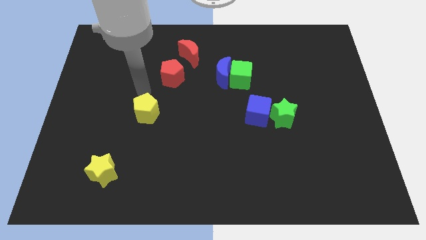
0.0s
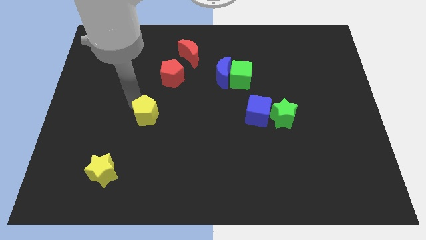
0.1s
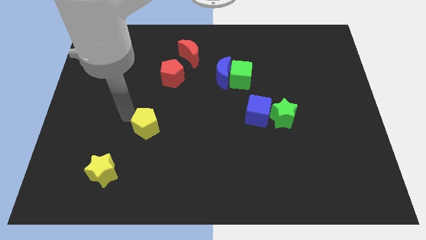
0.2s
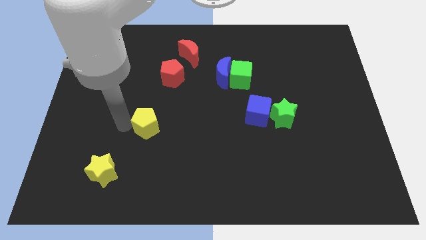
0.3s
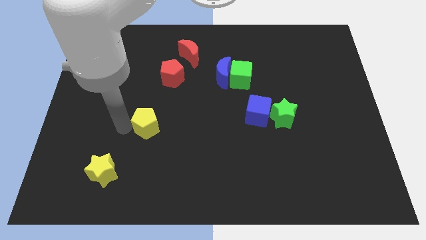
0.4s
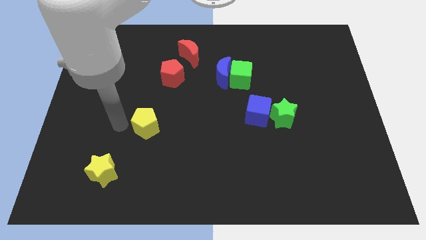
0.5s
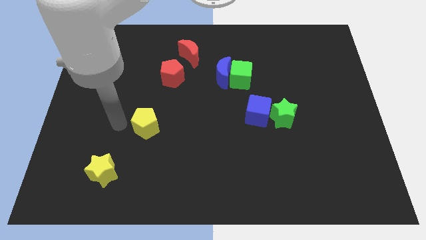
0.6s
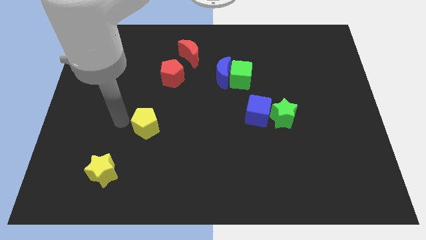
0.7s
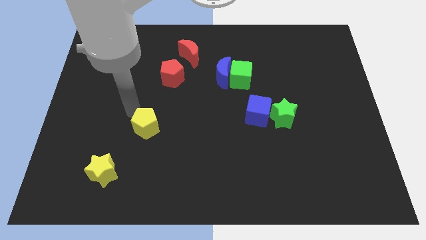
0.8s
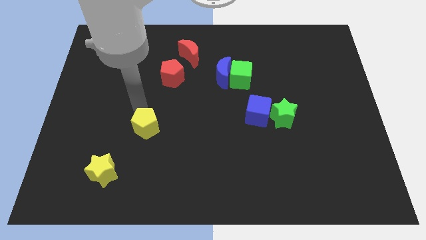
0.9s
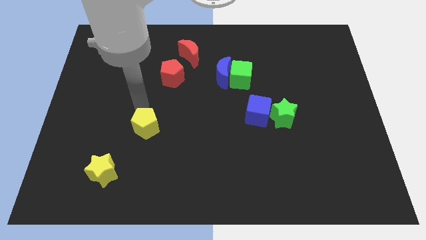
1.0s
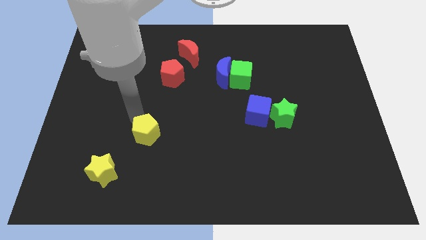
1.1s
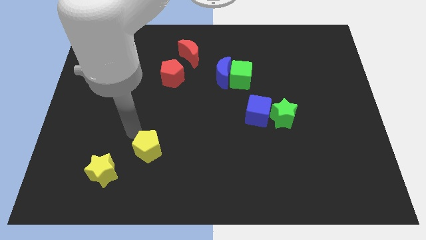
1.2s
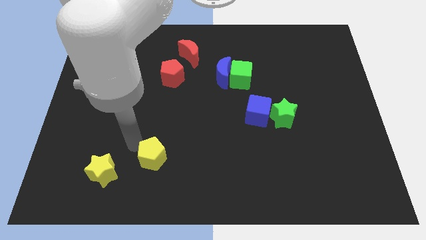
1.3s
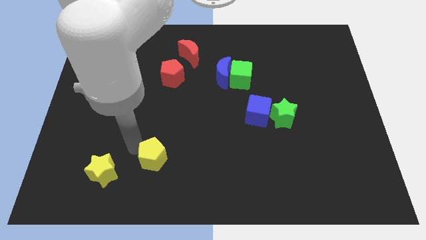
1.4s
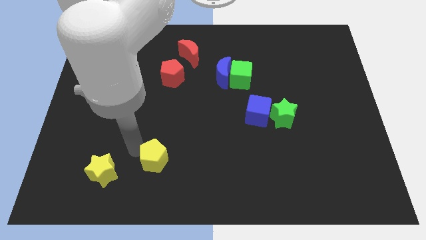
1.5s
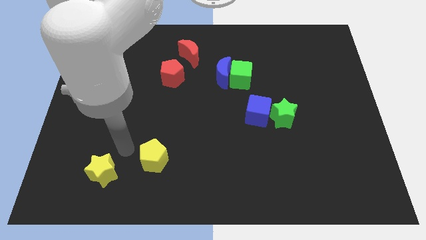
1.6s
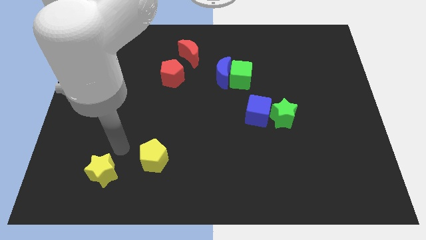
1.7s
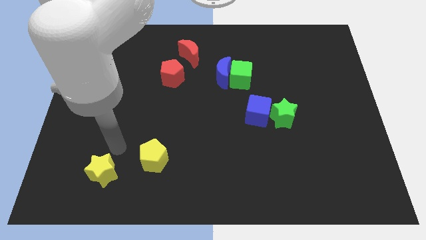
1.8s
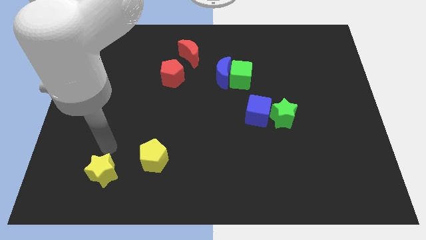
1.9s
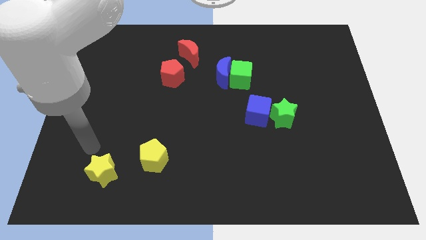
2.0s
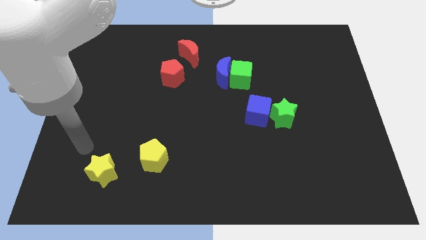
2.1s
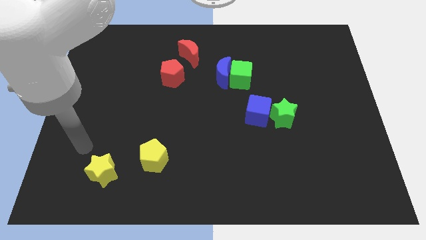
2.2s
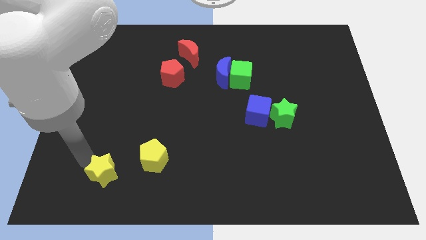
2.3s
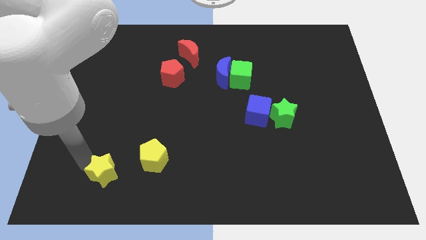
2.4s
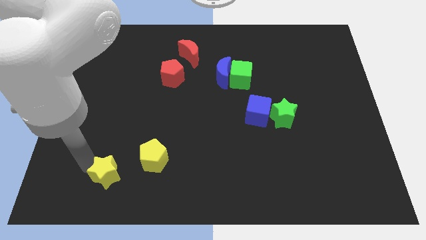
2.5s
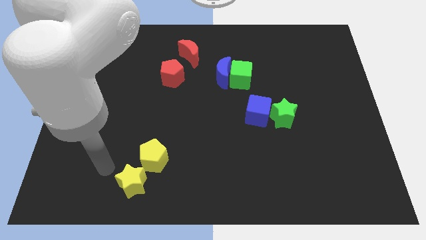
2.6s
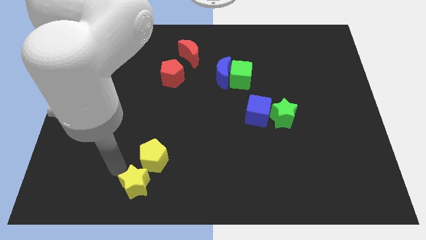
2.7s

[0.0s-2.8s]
push the yellow blocks towards the bottom side

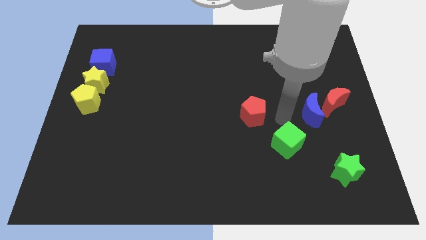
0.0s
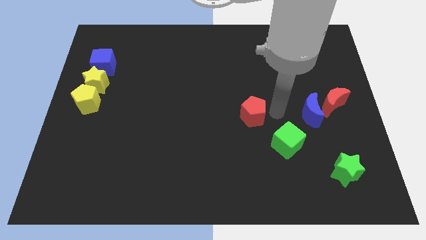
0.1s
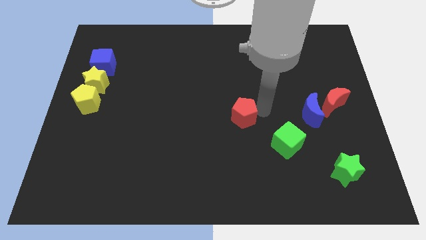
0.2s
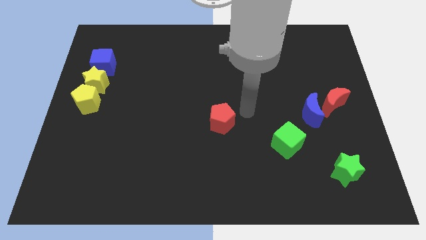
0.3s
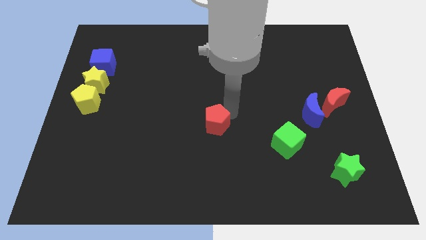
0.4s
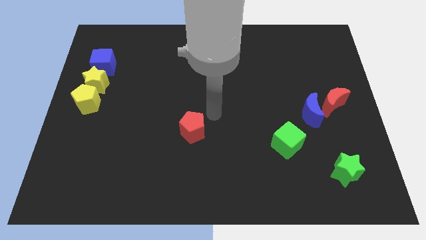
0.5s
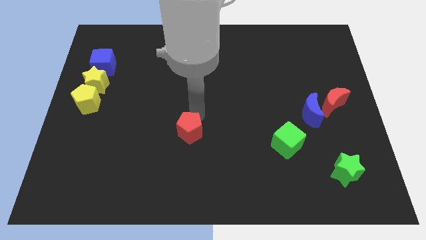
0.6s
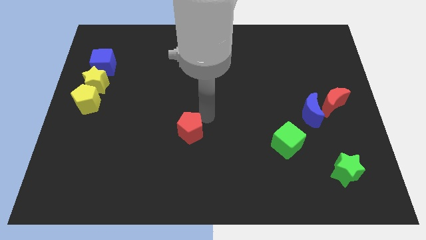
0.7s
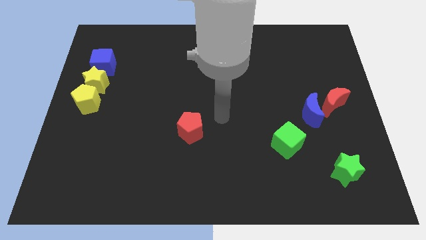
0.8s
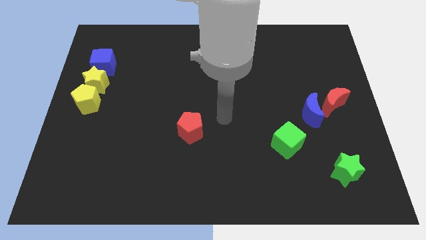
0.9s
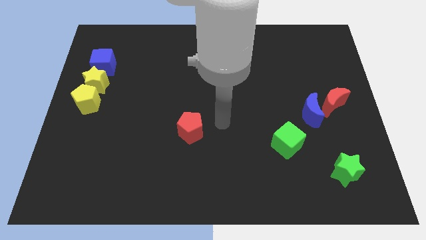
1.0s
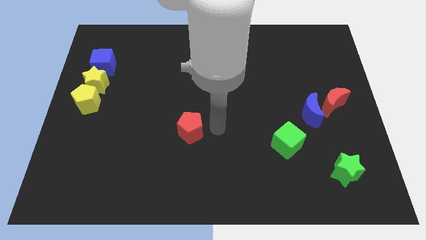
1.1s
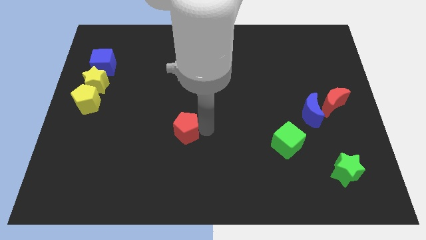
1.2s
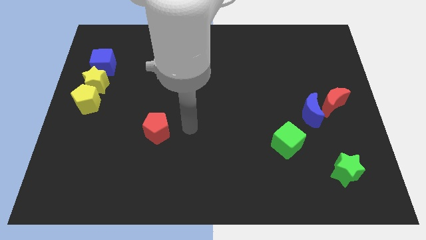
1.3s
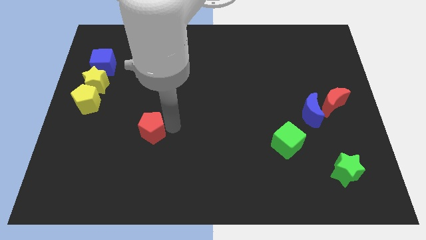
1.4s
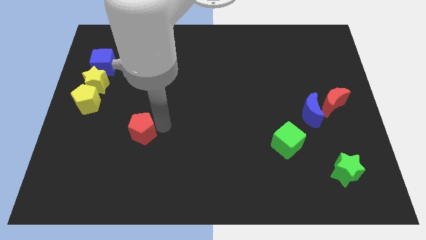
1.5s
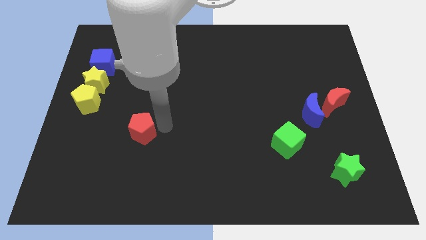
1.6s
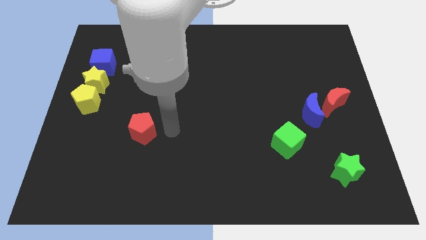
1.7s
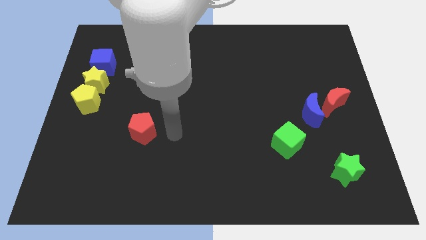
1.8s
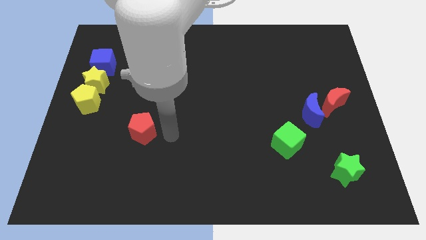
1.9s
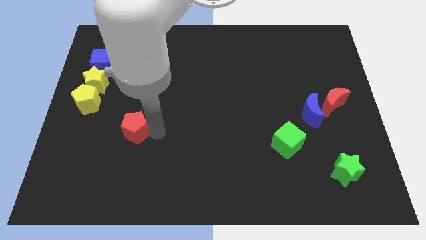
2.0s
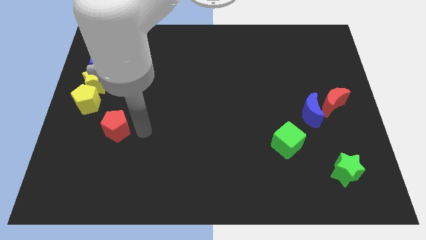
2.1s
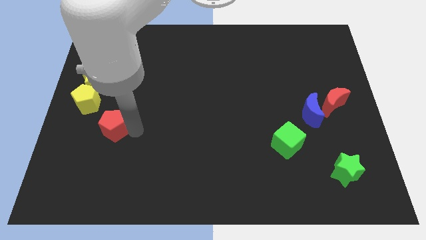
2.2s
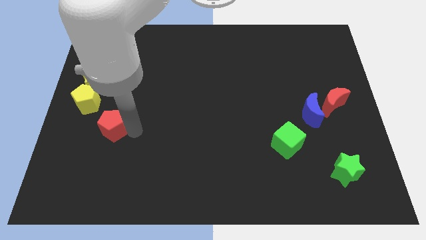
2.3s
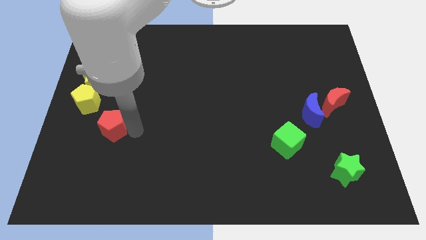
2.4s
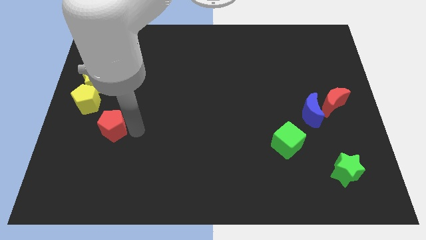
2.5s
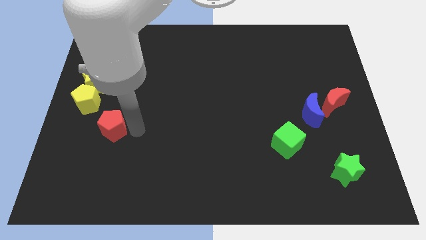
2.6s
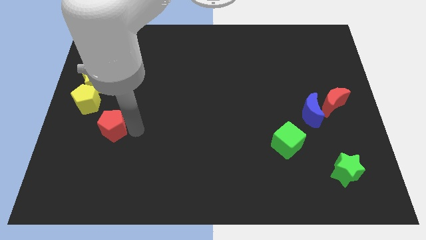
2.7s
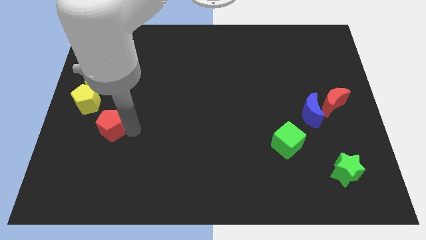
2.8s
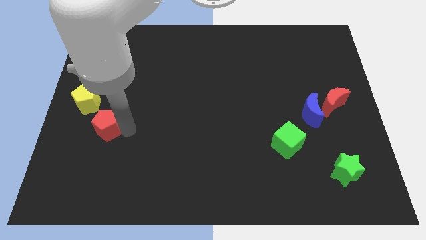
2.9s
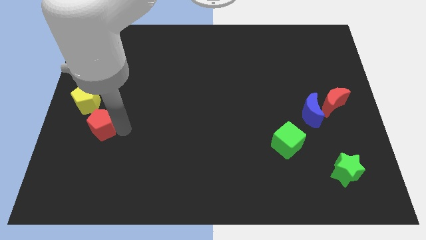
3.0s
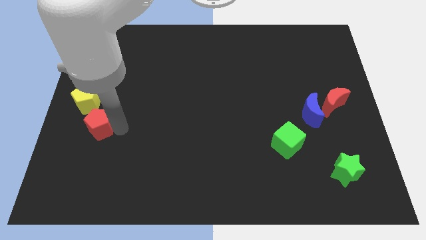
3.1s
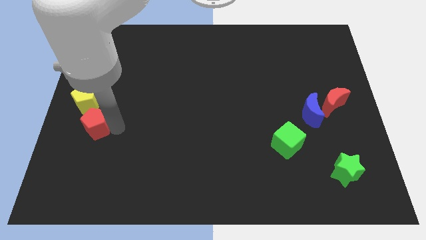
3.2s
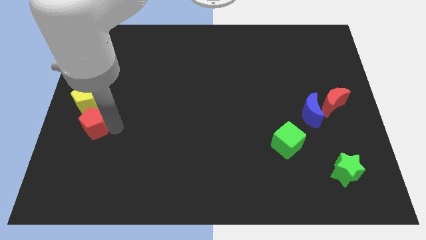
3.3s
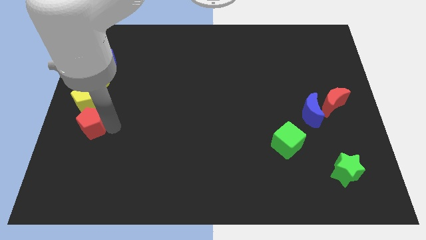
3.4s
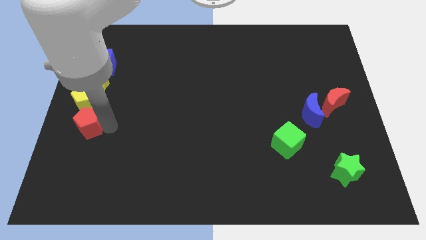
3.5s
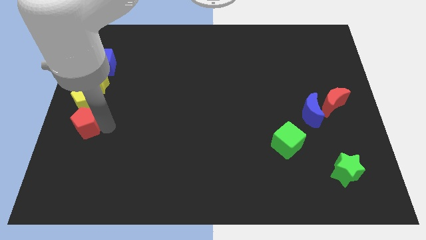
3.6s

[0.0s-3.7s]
put the red pentagon below the yellow pentagon

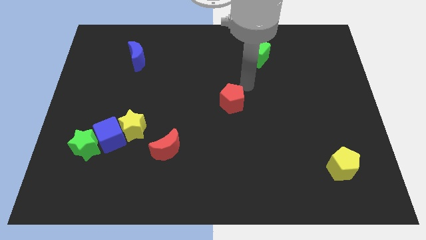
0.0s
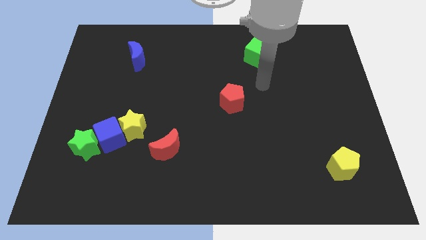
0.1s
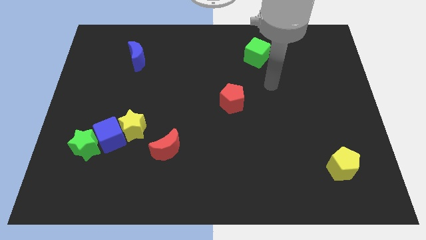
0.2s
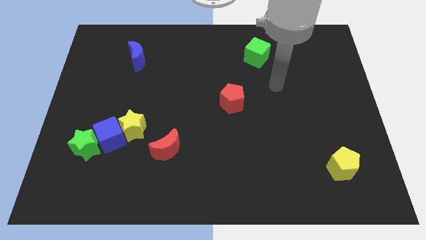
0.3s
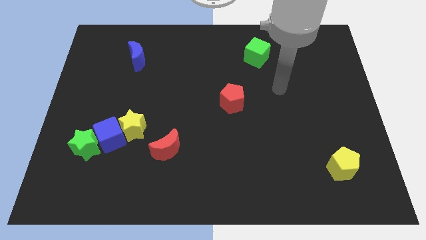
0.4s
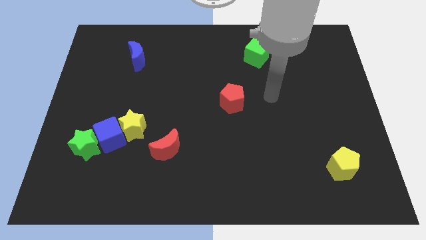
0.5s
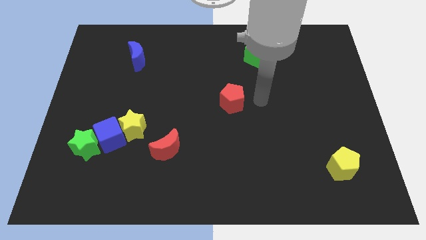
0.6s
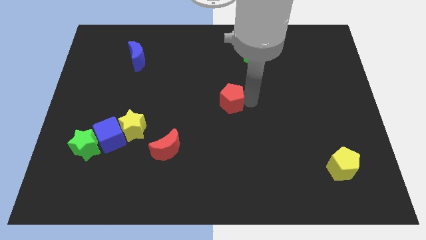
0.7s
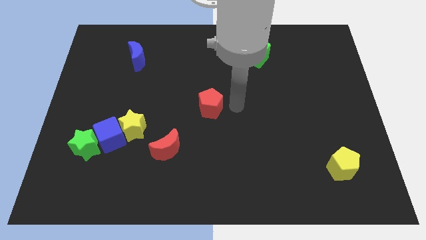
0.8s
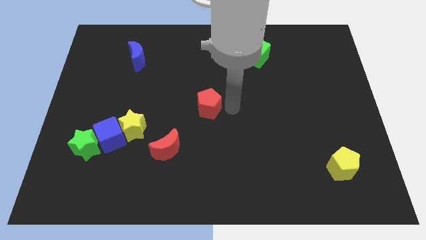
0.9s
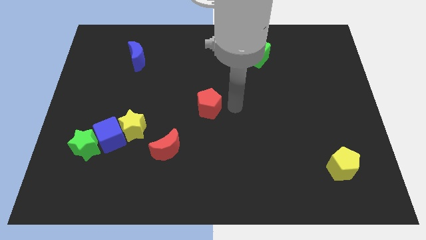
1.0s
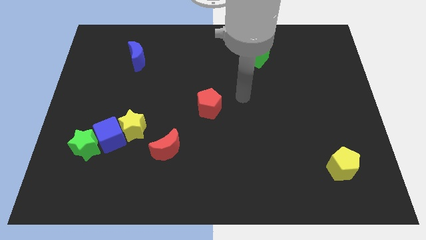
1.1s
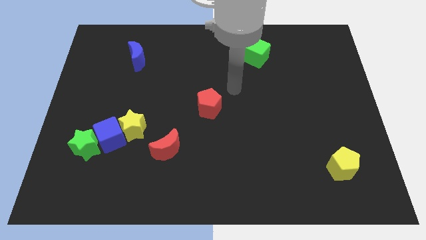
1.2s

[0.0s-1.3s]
move the red pentagon at the center of the board

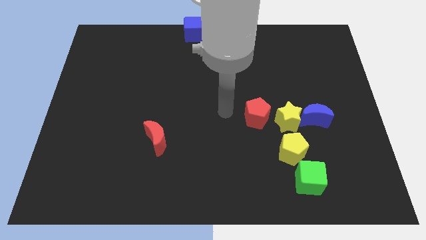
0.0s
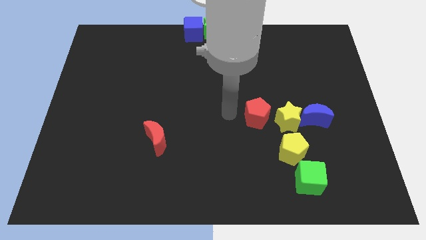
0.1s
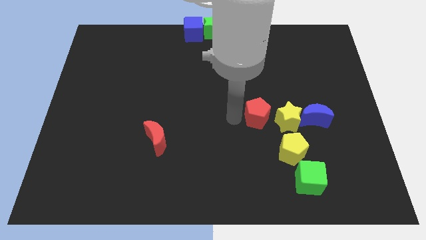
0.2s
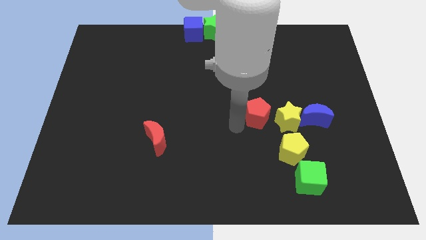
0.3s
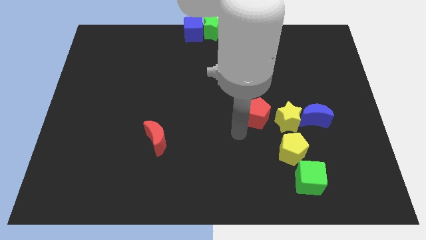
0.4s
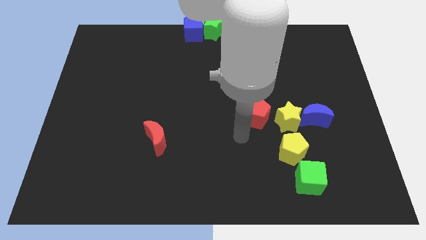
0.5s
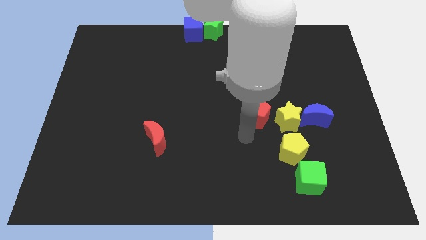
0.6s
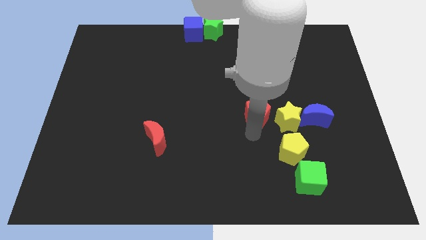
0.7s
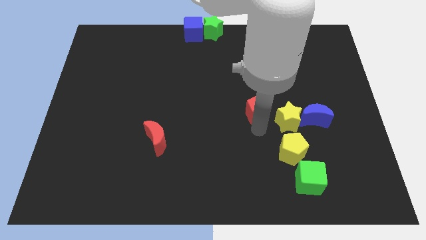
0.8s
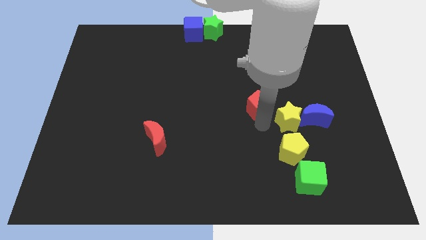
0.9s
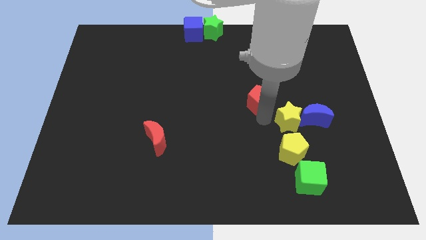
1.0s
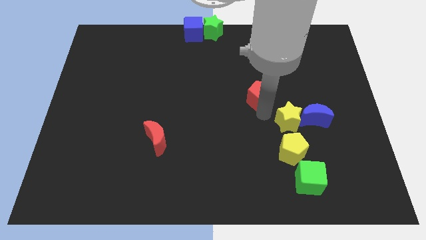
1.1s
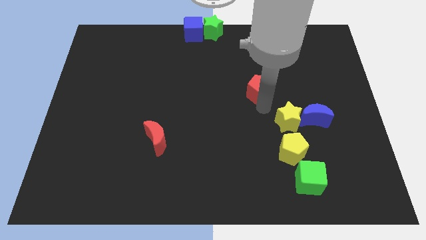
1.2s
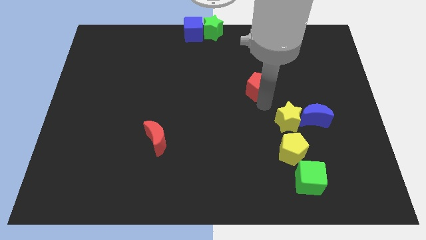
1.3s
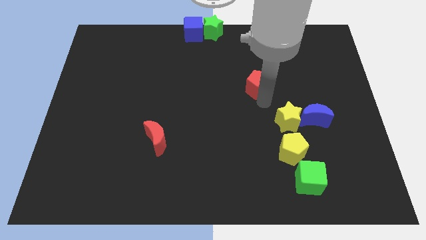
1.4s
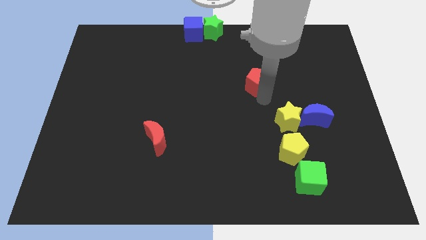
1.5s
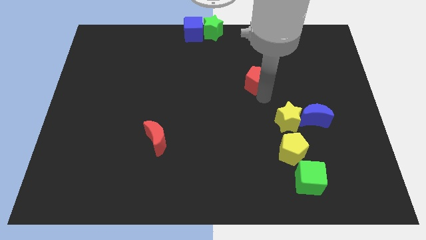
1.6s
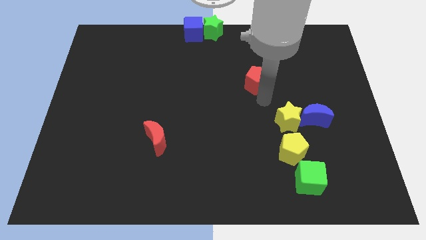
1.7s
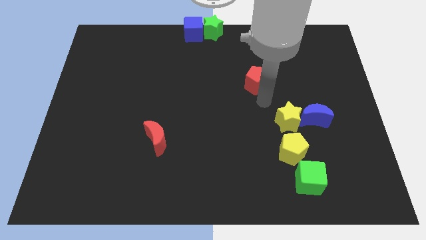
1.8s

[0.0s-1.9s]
separate the red pentagon from the yellow star
